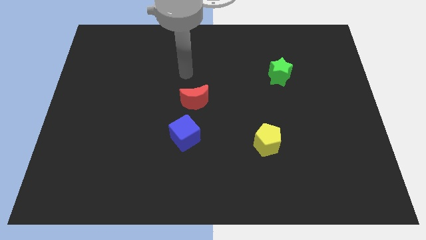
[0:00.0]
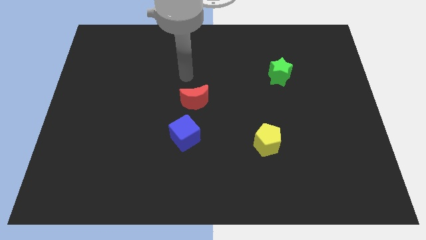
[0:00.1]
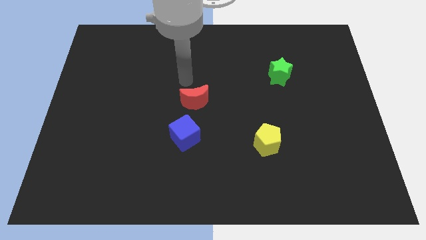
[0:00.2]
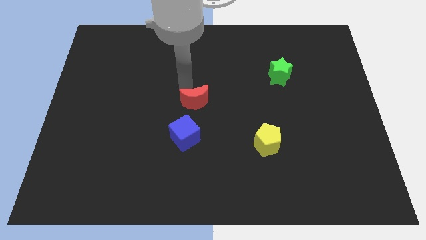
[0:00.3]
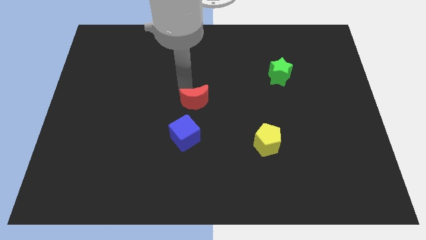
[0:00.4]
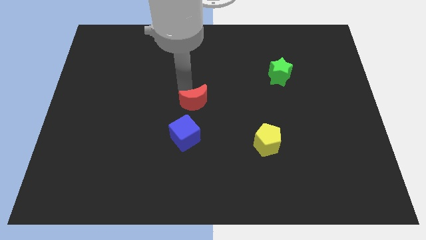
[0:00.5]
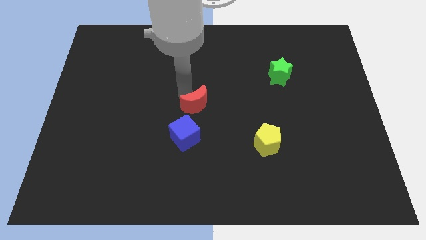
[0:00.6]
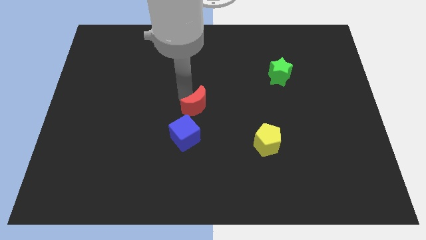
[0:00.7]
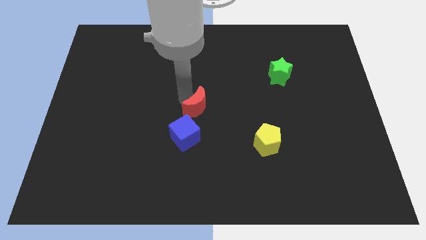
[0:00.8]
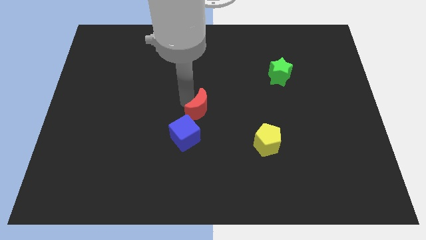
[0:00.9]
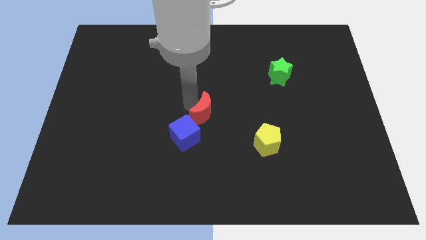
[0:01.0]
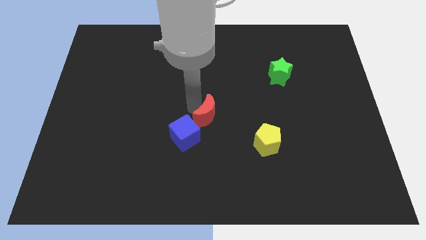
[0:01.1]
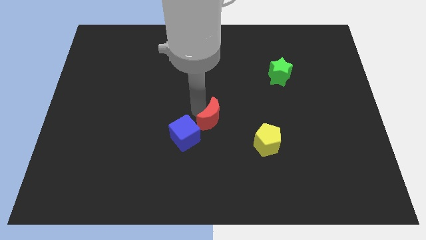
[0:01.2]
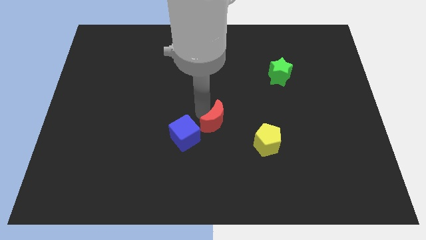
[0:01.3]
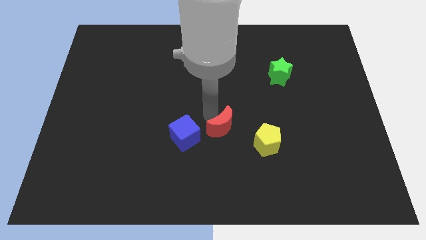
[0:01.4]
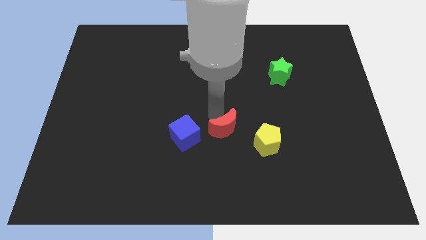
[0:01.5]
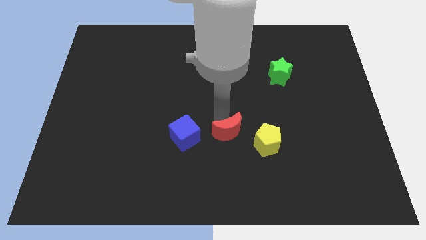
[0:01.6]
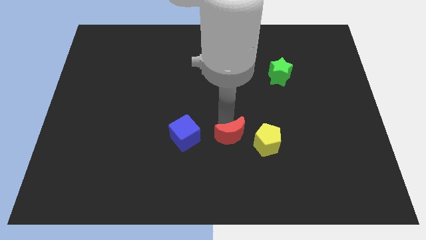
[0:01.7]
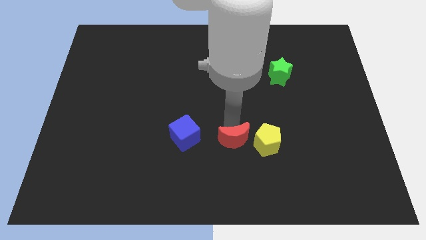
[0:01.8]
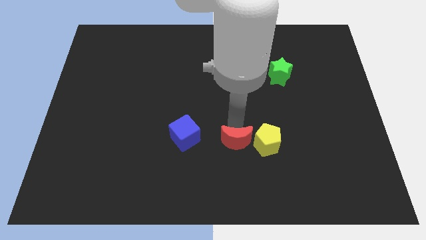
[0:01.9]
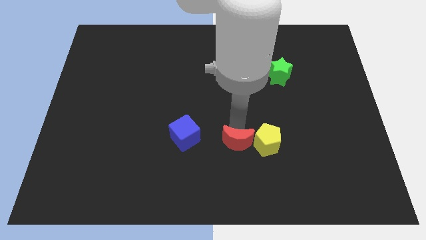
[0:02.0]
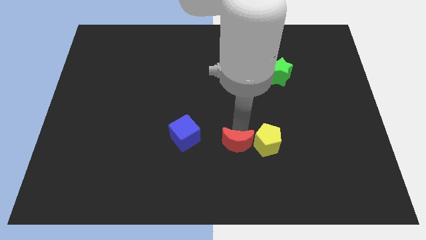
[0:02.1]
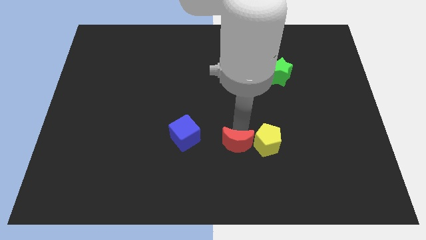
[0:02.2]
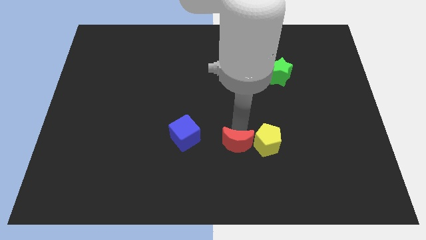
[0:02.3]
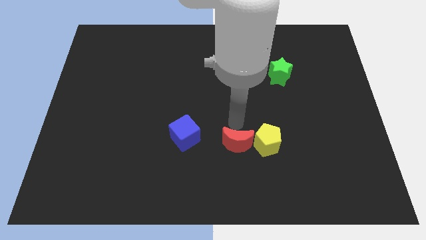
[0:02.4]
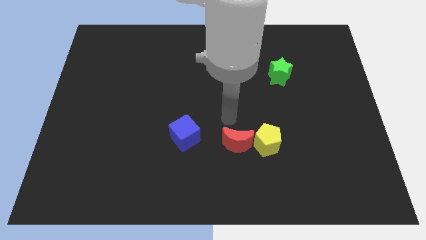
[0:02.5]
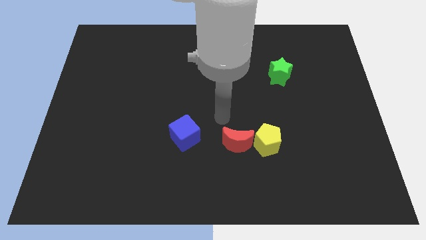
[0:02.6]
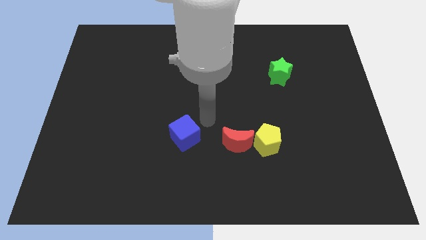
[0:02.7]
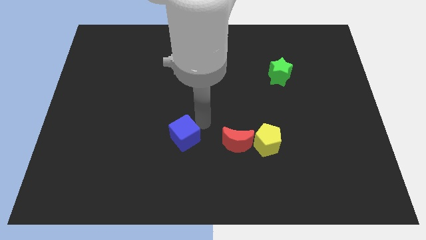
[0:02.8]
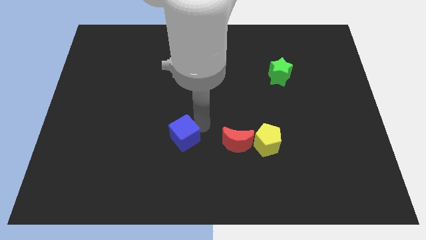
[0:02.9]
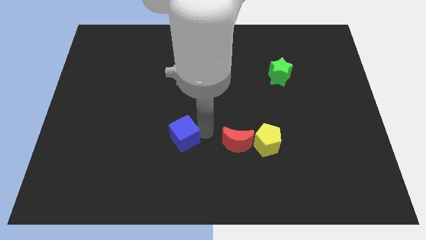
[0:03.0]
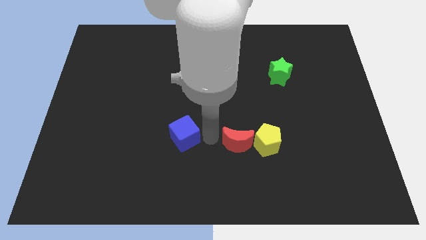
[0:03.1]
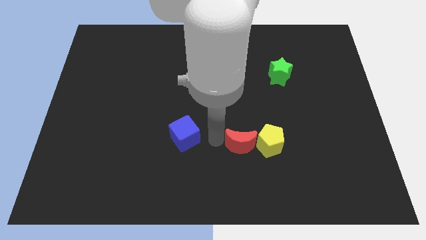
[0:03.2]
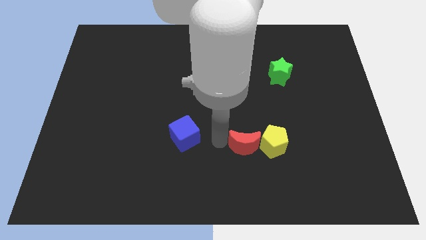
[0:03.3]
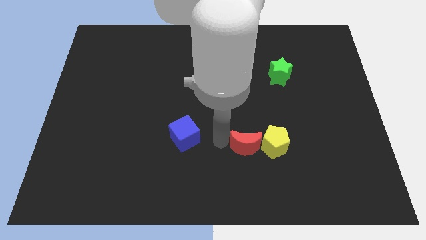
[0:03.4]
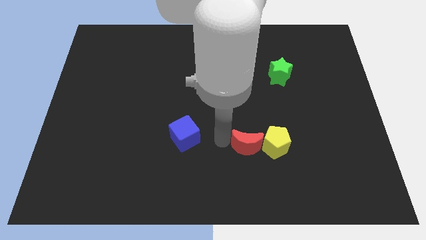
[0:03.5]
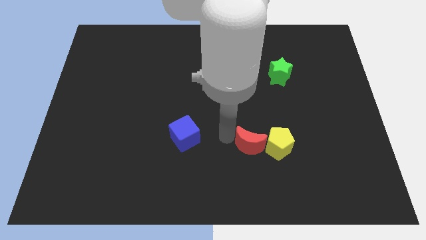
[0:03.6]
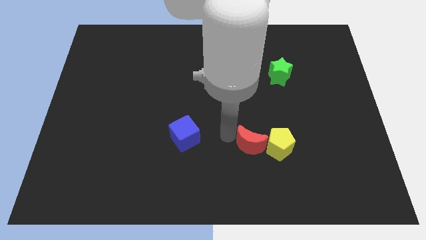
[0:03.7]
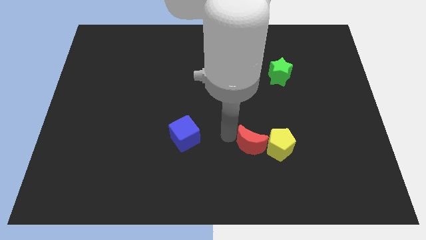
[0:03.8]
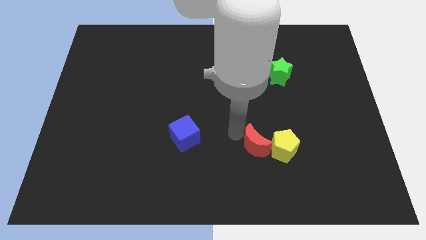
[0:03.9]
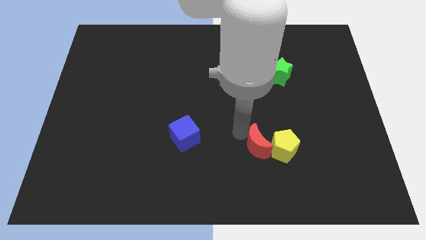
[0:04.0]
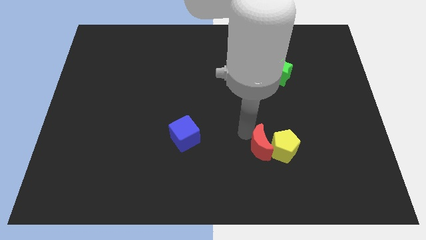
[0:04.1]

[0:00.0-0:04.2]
move the red moon next to the pentagon

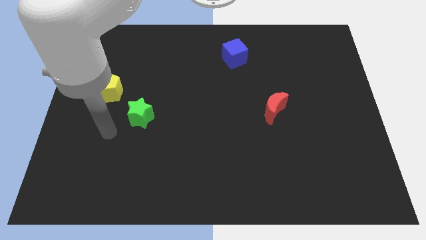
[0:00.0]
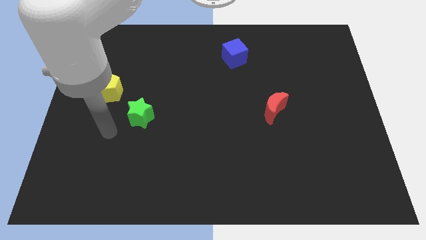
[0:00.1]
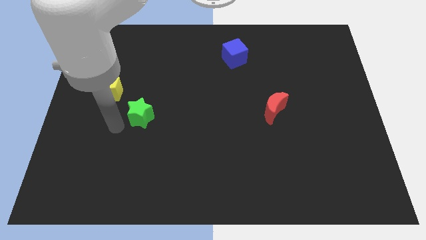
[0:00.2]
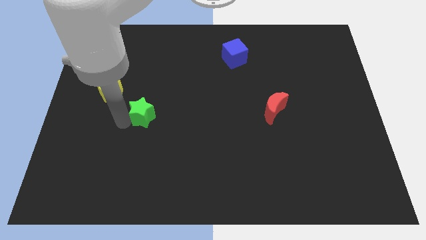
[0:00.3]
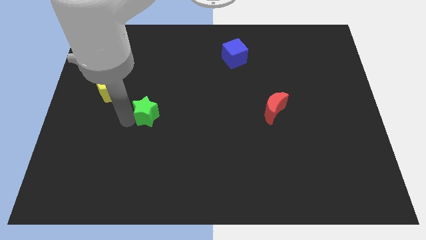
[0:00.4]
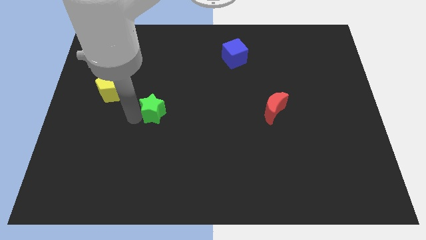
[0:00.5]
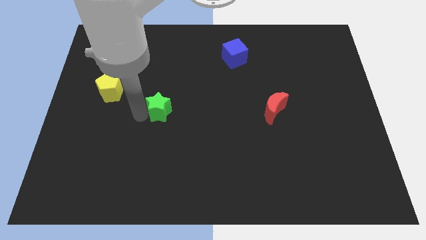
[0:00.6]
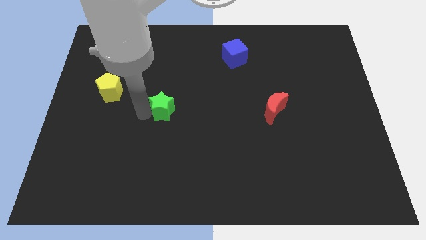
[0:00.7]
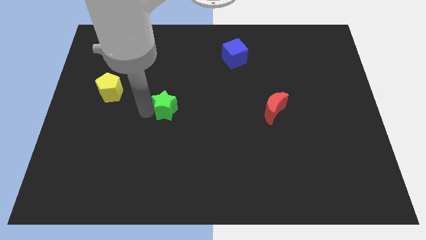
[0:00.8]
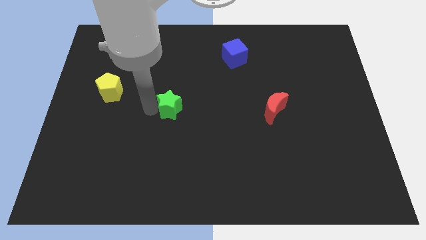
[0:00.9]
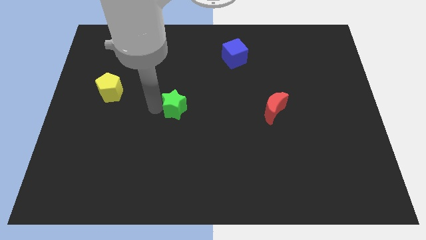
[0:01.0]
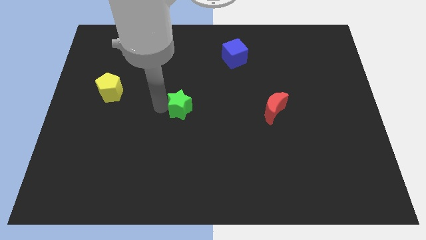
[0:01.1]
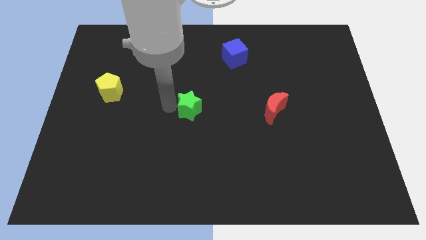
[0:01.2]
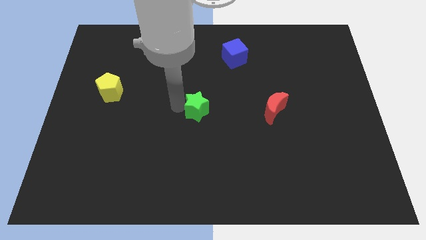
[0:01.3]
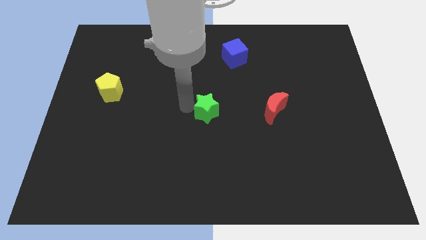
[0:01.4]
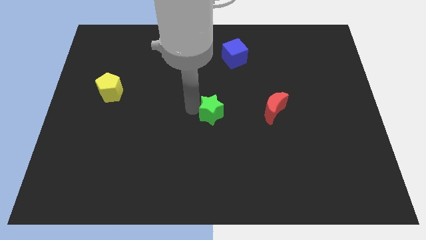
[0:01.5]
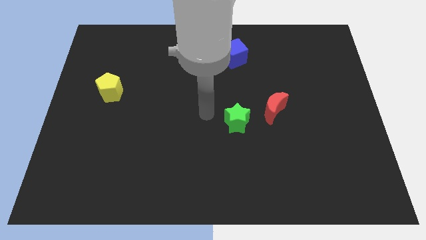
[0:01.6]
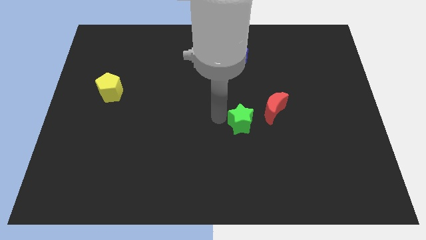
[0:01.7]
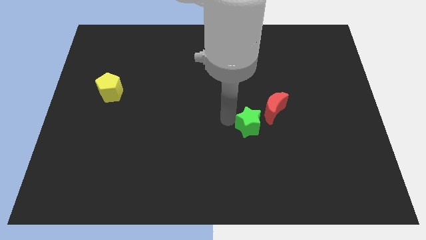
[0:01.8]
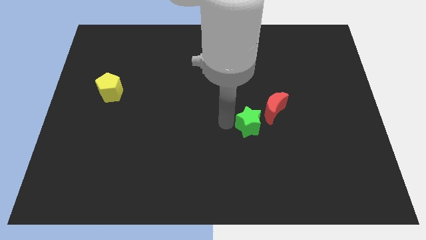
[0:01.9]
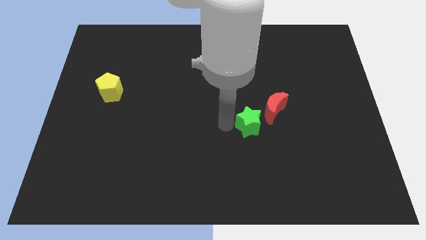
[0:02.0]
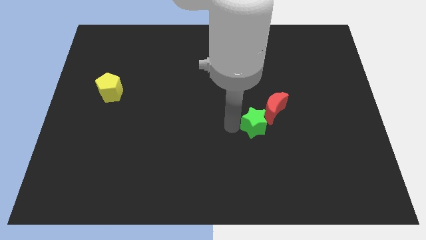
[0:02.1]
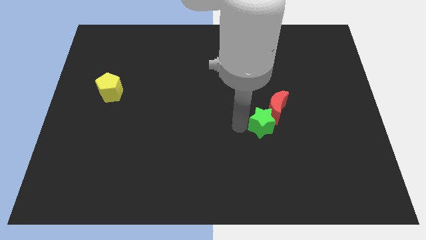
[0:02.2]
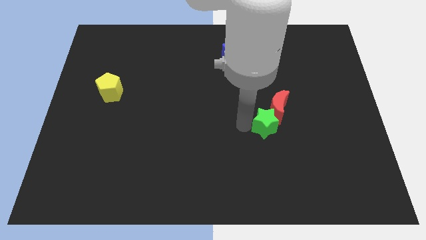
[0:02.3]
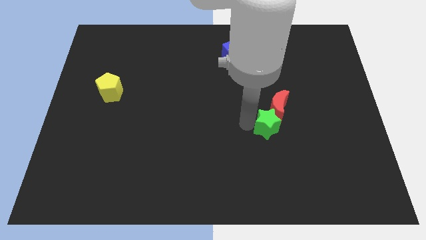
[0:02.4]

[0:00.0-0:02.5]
slide the star towards the red block

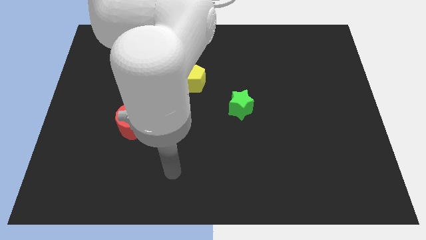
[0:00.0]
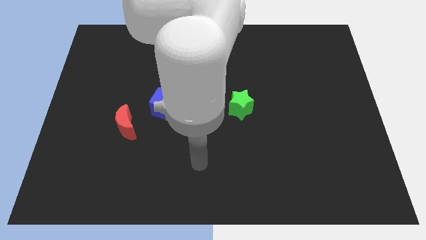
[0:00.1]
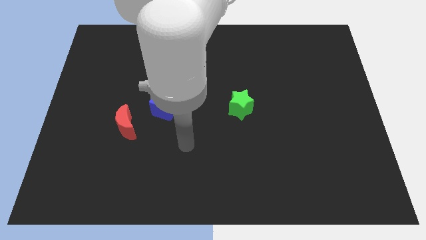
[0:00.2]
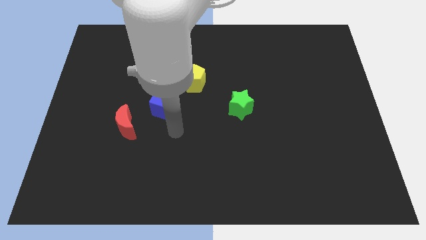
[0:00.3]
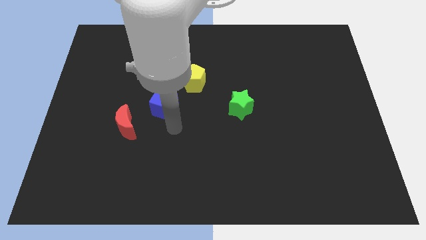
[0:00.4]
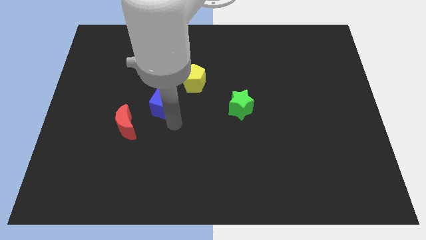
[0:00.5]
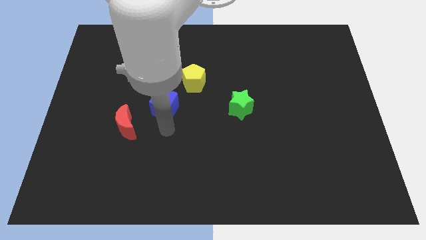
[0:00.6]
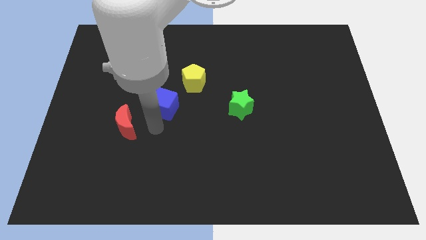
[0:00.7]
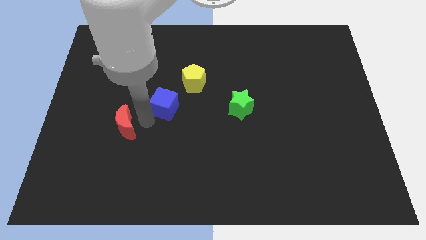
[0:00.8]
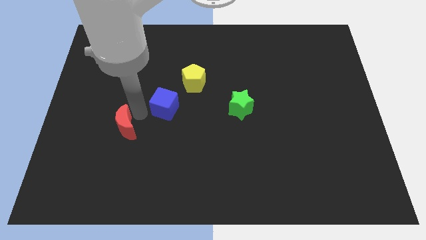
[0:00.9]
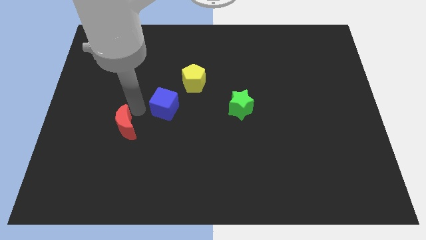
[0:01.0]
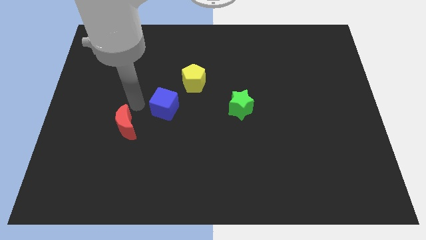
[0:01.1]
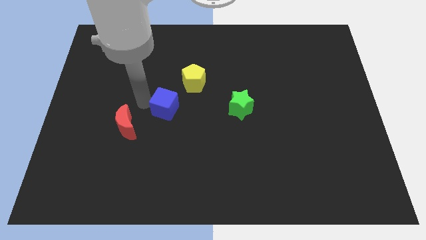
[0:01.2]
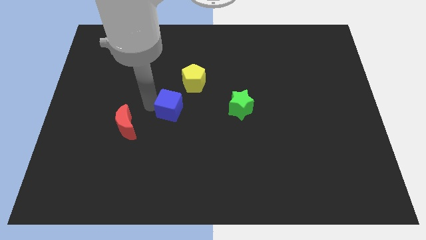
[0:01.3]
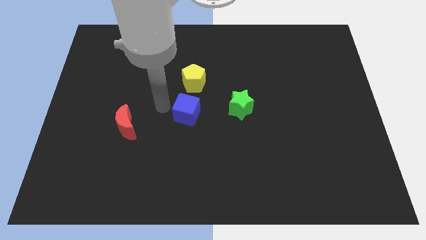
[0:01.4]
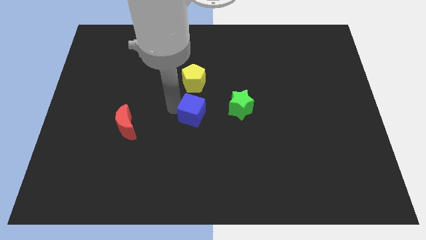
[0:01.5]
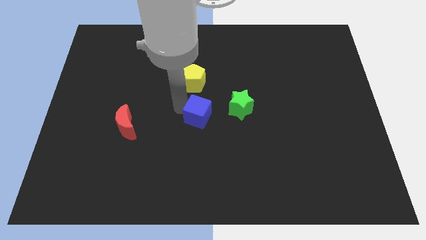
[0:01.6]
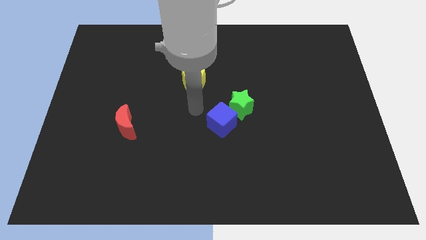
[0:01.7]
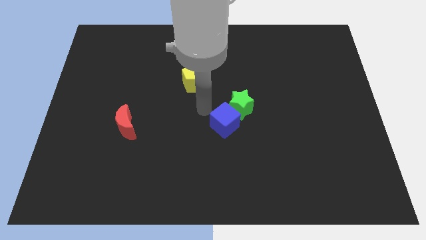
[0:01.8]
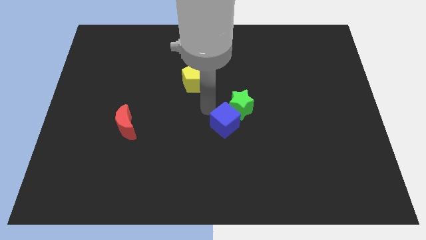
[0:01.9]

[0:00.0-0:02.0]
slide the blue cube close to the star
